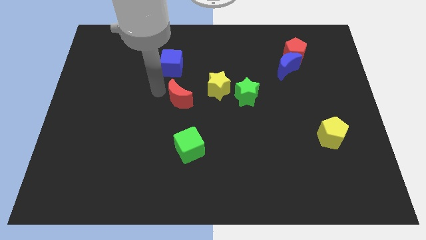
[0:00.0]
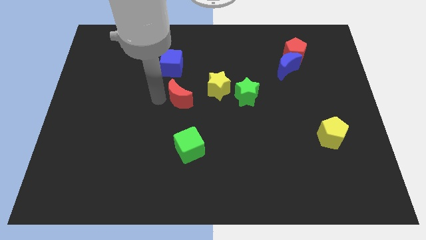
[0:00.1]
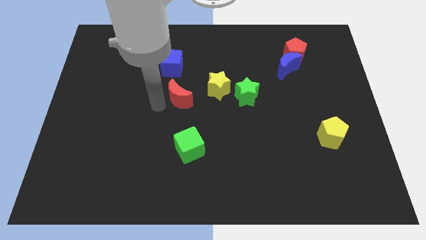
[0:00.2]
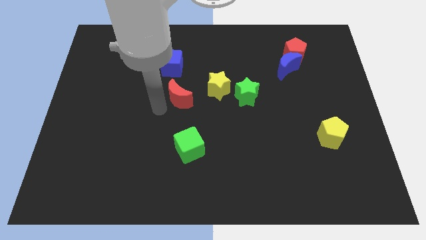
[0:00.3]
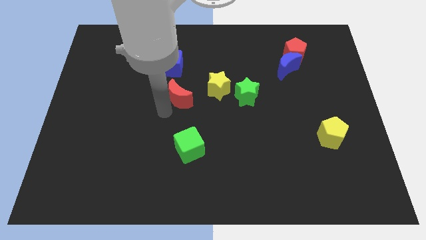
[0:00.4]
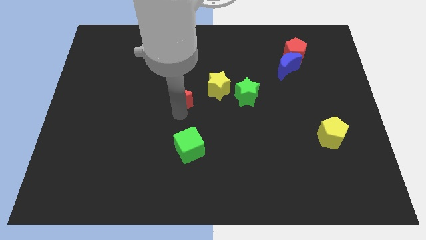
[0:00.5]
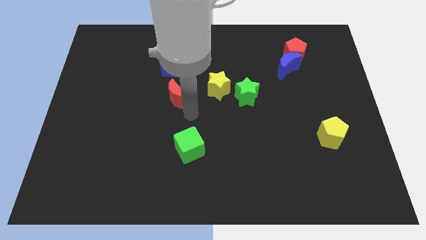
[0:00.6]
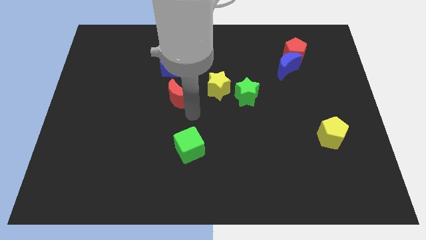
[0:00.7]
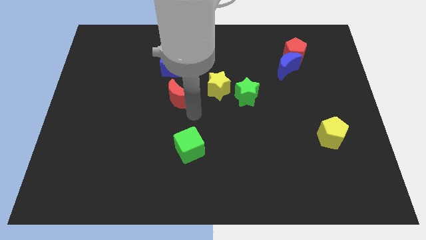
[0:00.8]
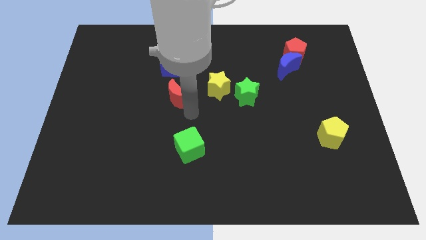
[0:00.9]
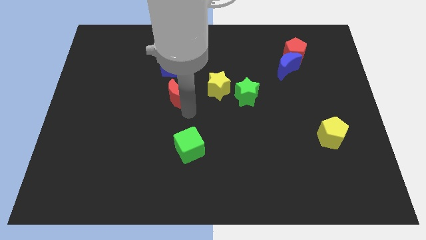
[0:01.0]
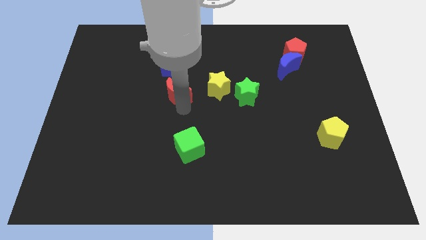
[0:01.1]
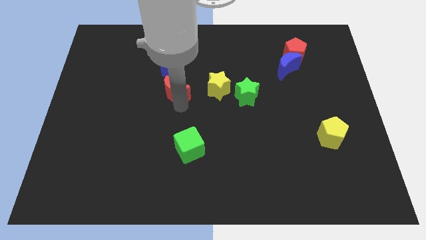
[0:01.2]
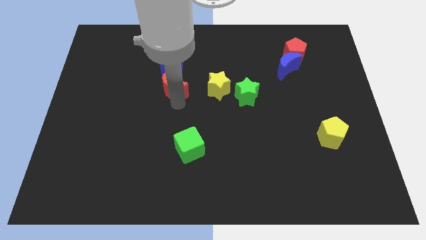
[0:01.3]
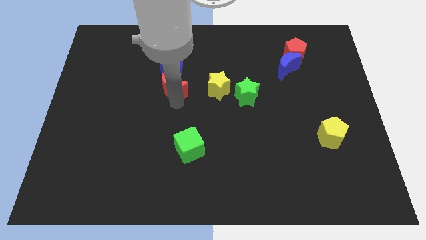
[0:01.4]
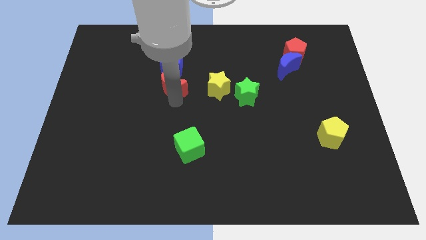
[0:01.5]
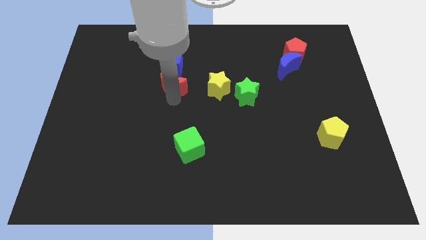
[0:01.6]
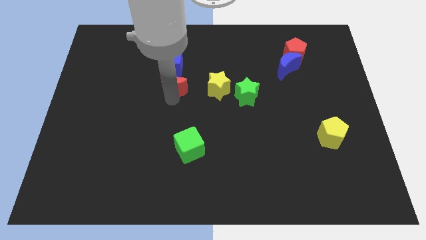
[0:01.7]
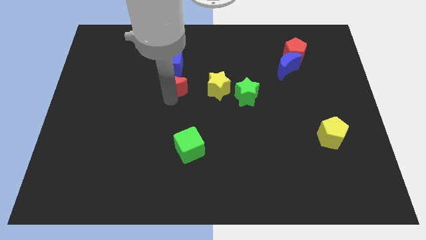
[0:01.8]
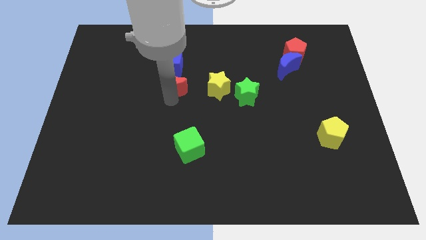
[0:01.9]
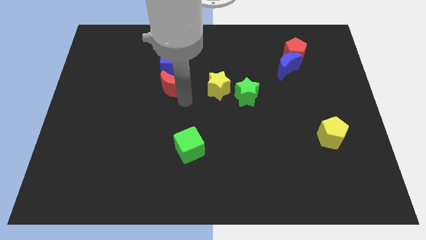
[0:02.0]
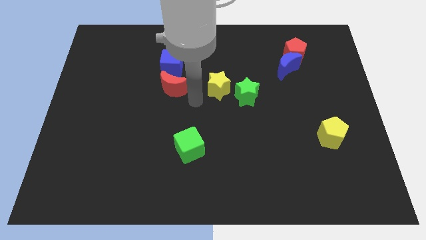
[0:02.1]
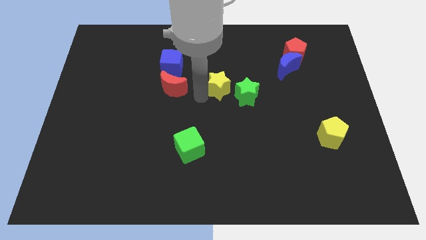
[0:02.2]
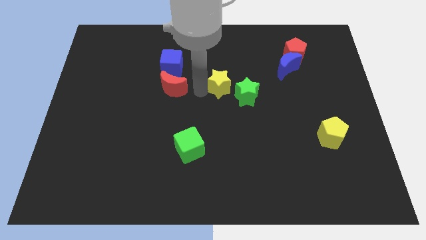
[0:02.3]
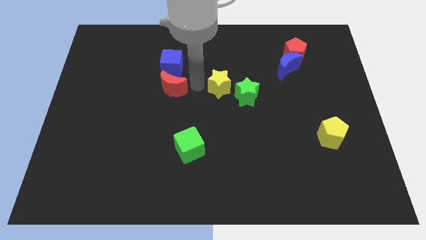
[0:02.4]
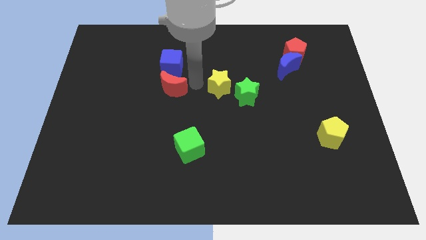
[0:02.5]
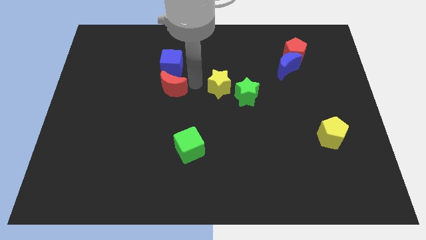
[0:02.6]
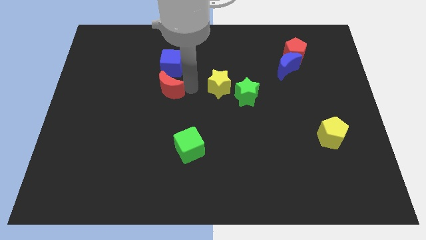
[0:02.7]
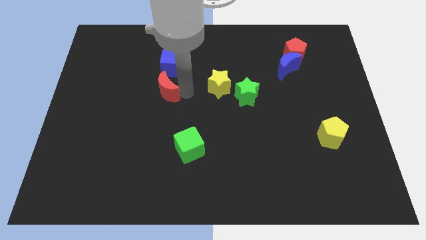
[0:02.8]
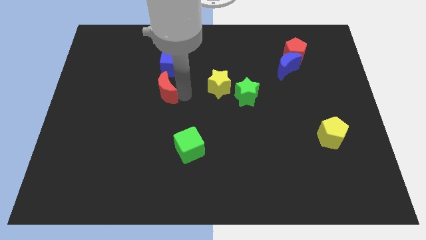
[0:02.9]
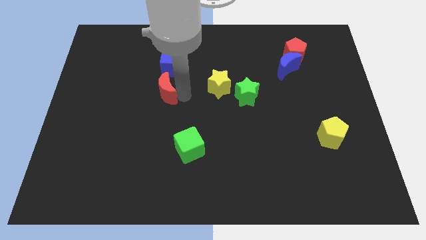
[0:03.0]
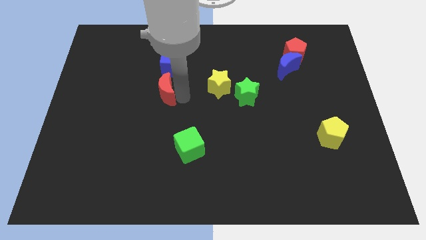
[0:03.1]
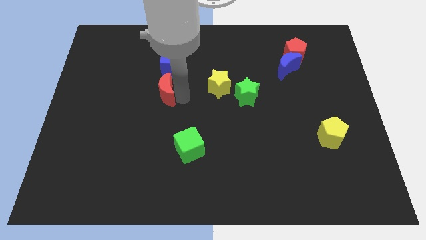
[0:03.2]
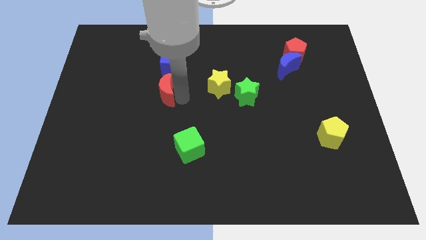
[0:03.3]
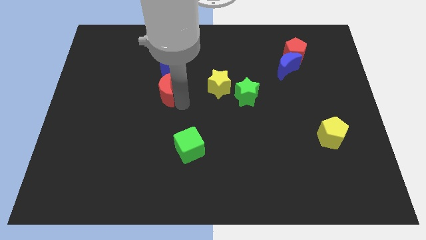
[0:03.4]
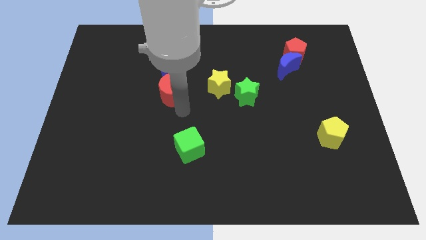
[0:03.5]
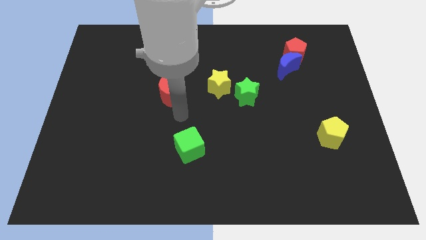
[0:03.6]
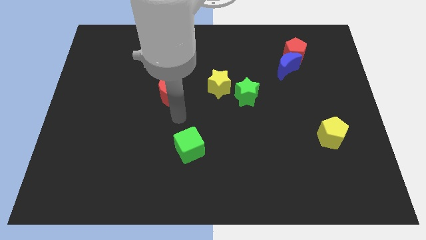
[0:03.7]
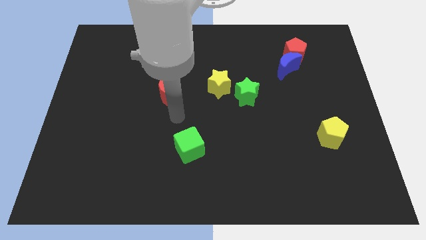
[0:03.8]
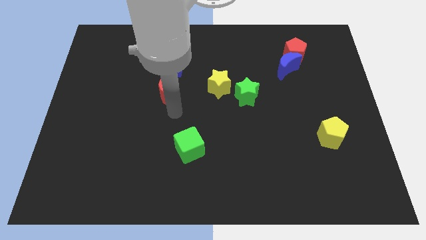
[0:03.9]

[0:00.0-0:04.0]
move the red crescent below the blue cube

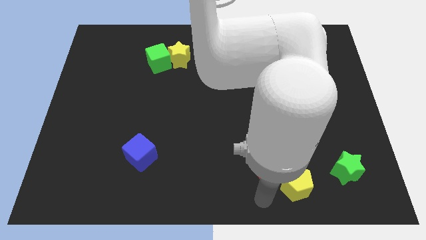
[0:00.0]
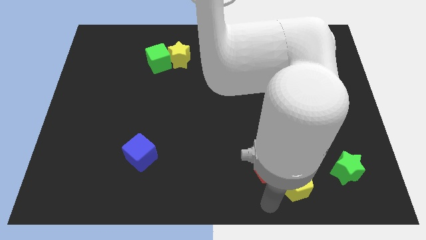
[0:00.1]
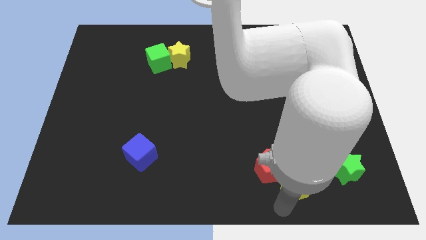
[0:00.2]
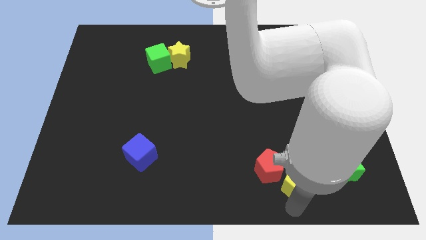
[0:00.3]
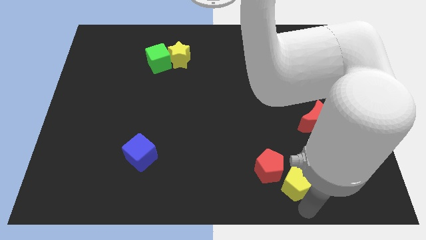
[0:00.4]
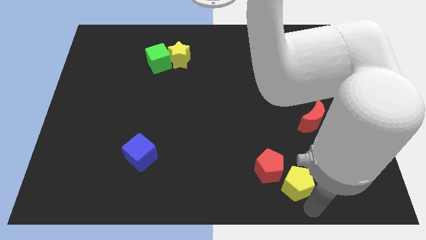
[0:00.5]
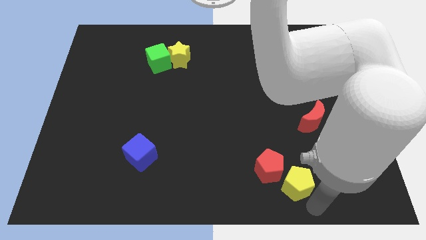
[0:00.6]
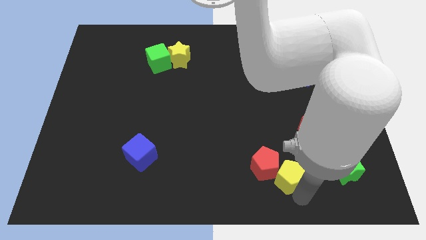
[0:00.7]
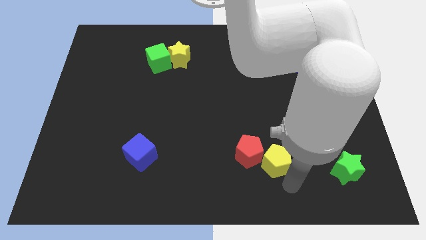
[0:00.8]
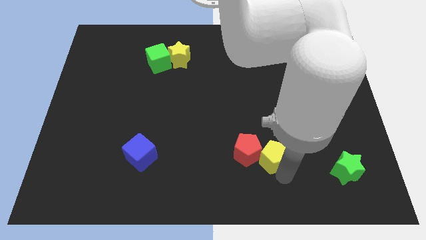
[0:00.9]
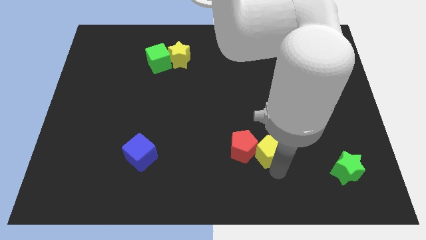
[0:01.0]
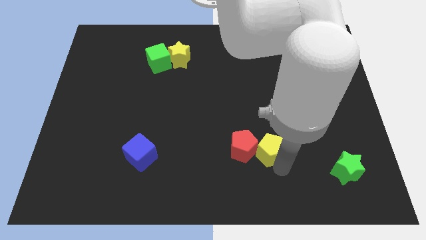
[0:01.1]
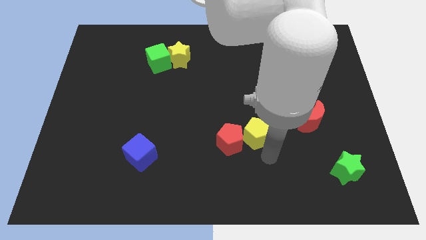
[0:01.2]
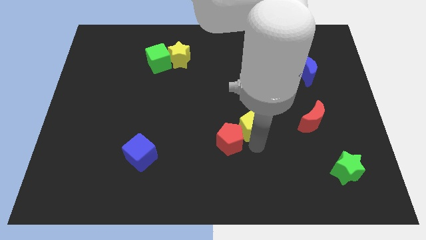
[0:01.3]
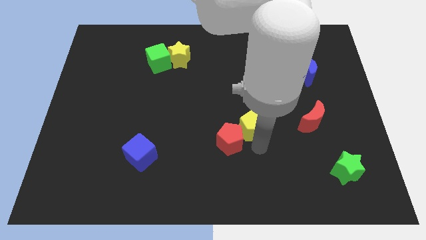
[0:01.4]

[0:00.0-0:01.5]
move the yellow pentagon to the left side of the red crescent

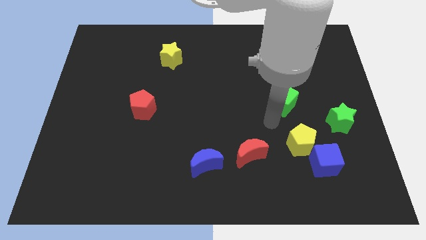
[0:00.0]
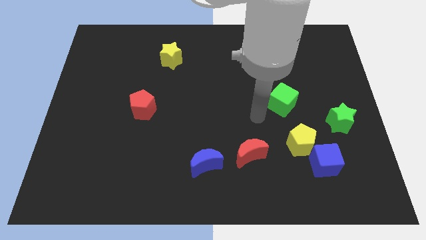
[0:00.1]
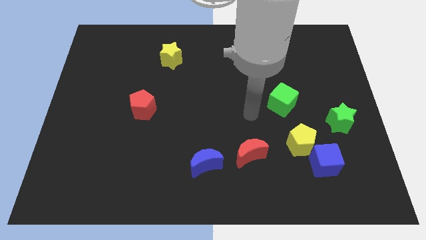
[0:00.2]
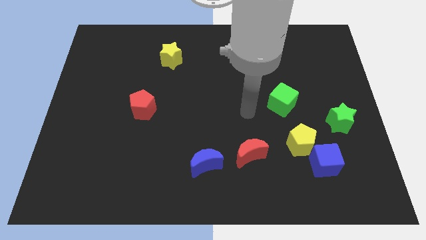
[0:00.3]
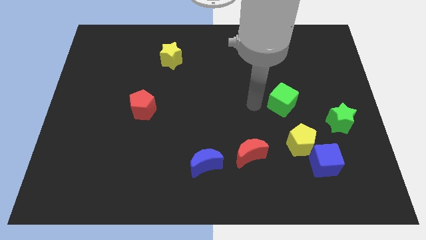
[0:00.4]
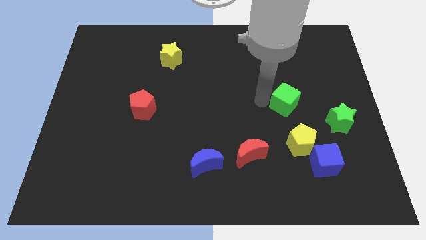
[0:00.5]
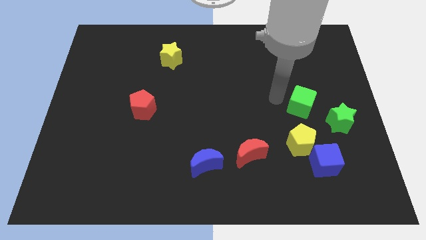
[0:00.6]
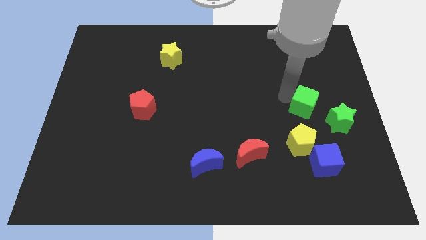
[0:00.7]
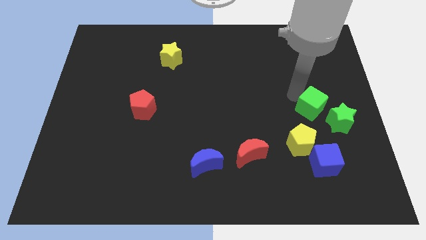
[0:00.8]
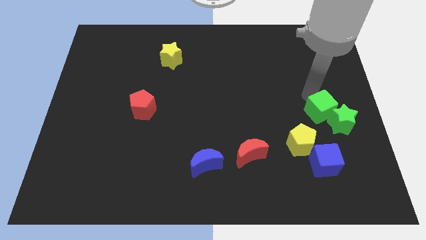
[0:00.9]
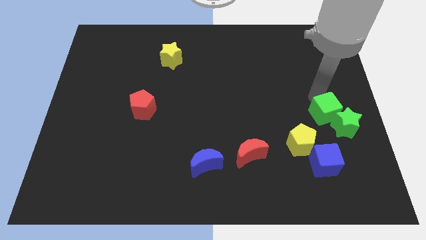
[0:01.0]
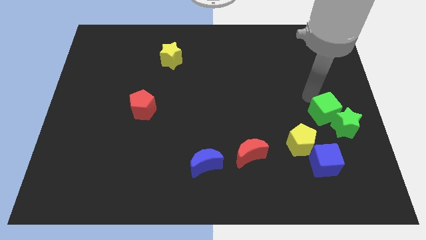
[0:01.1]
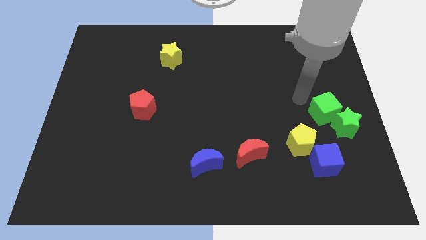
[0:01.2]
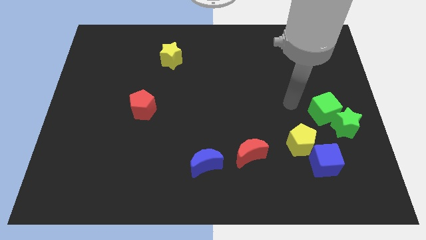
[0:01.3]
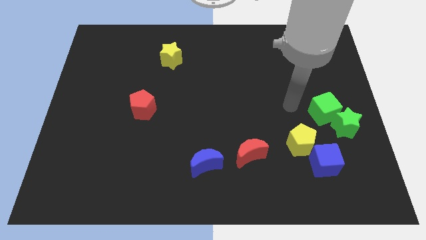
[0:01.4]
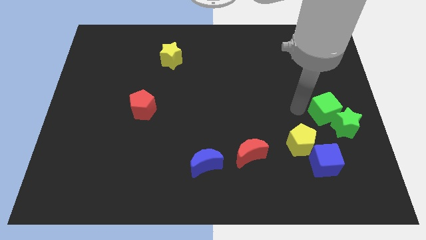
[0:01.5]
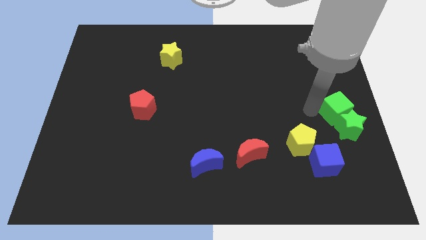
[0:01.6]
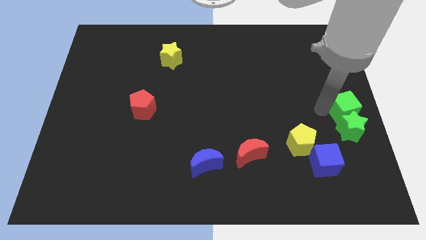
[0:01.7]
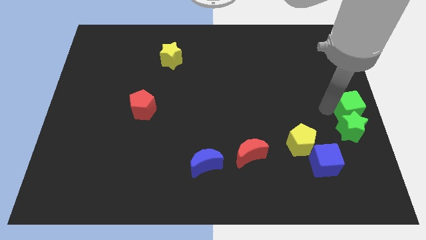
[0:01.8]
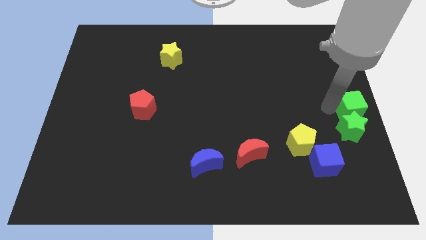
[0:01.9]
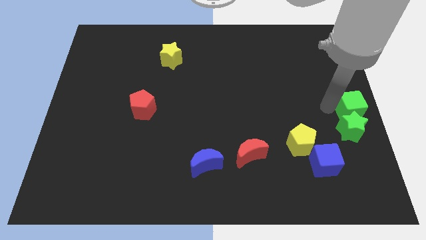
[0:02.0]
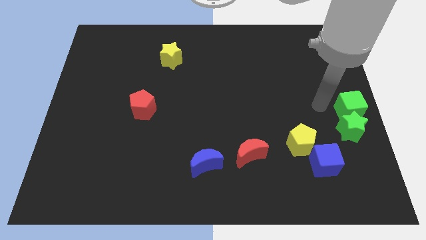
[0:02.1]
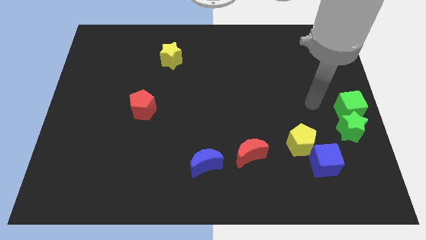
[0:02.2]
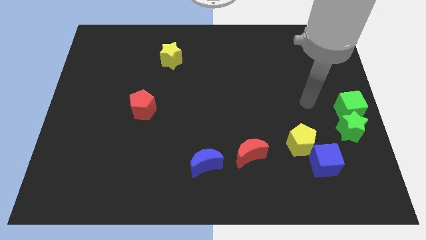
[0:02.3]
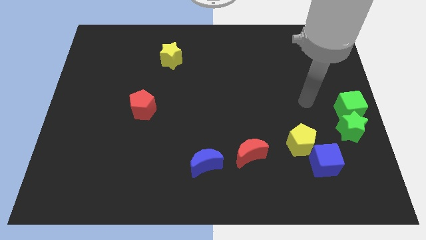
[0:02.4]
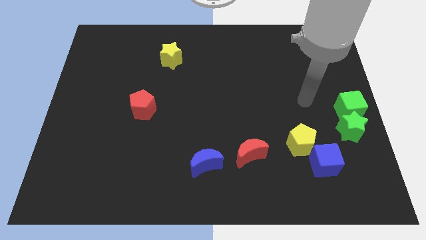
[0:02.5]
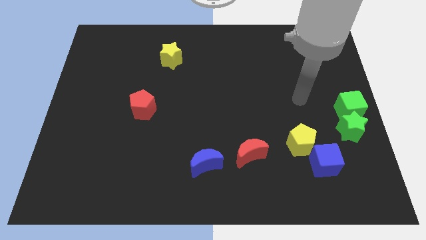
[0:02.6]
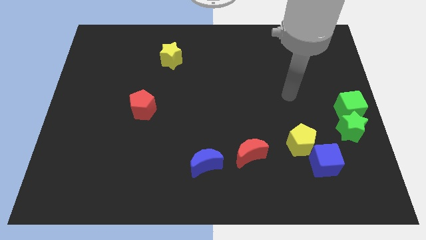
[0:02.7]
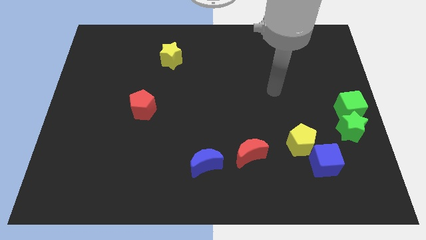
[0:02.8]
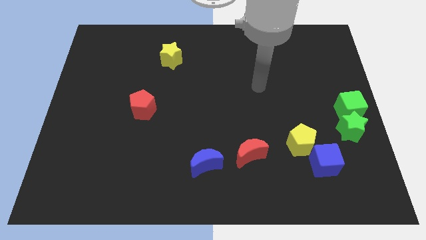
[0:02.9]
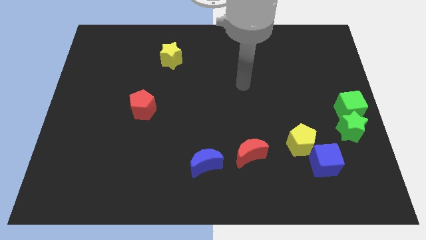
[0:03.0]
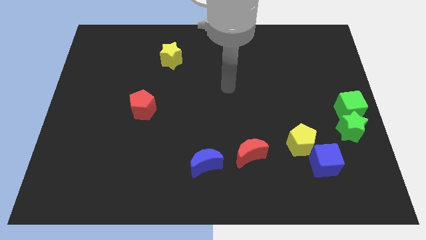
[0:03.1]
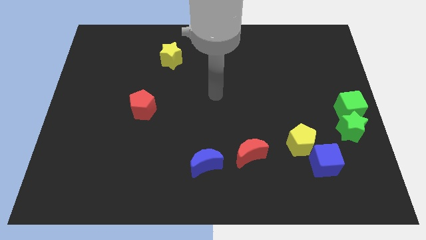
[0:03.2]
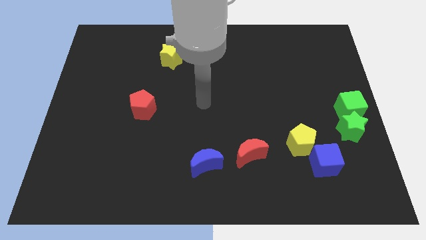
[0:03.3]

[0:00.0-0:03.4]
place the green cube up to the green star

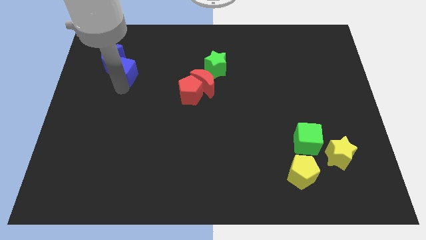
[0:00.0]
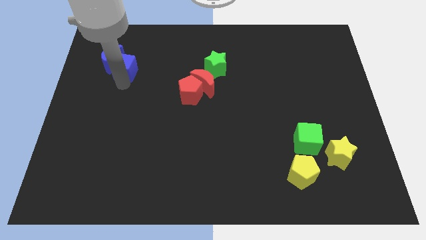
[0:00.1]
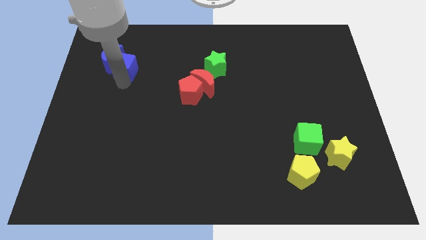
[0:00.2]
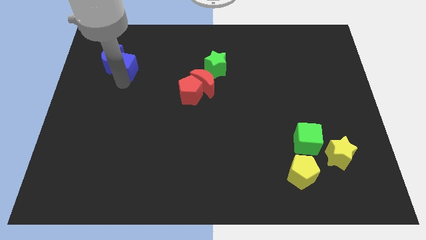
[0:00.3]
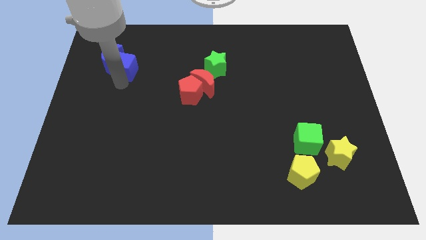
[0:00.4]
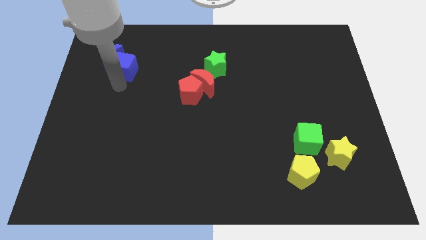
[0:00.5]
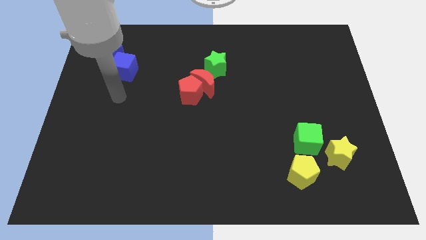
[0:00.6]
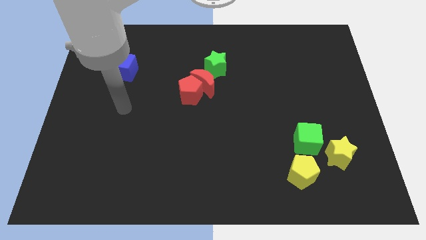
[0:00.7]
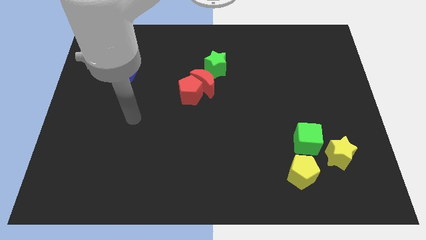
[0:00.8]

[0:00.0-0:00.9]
move the blue cube close to the blue moon
